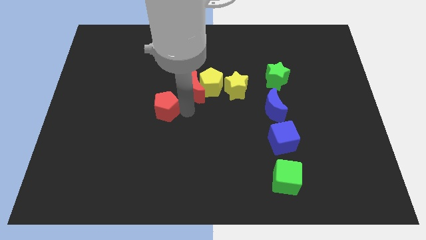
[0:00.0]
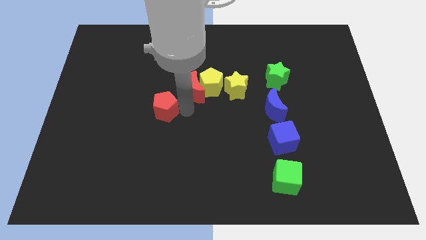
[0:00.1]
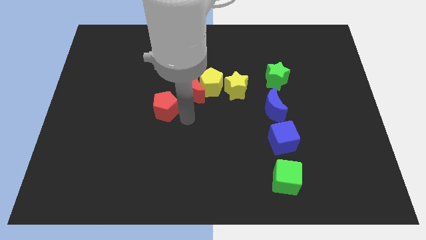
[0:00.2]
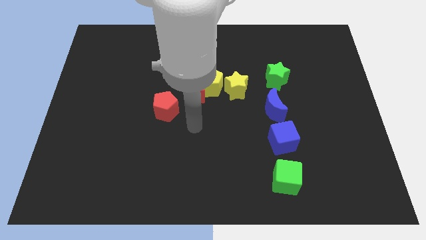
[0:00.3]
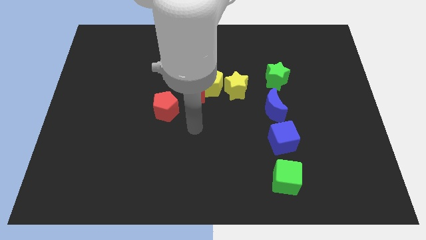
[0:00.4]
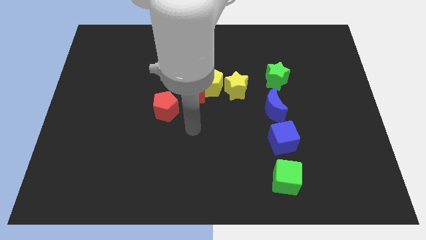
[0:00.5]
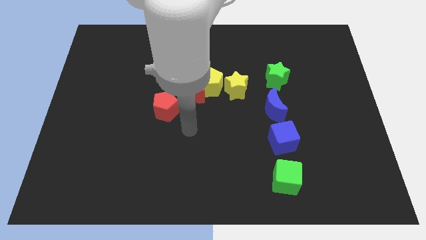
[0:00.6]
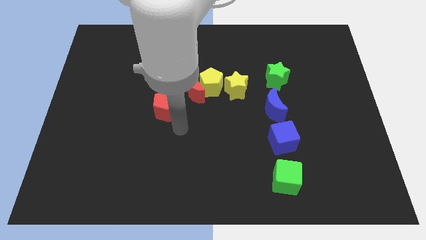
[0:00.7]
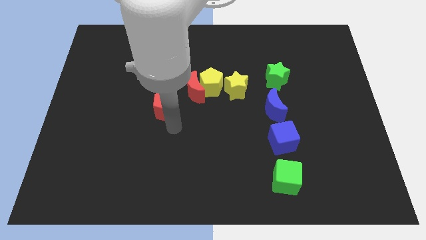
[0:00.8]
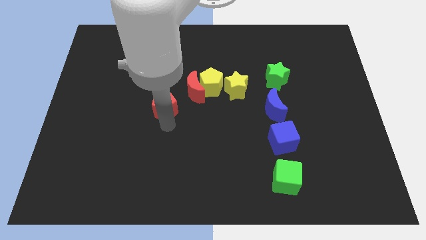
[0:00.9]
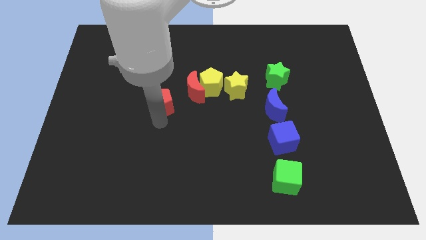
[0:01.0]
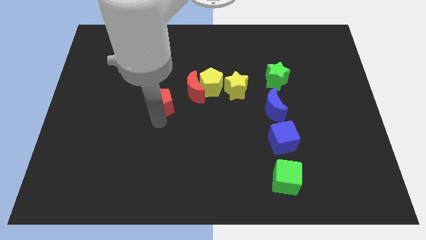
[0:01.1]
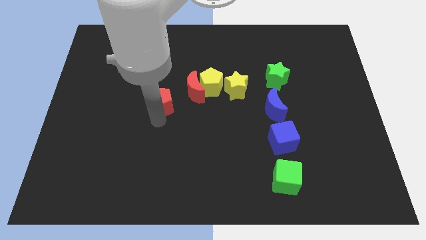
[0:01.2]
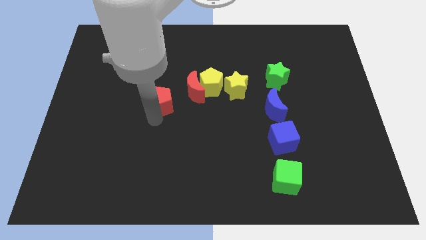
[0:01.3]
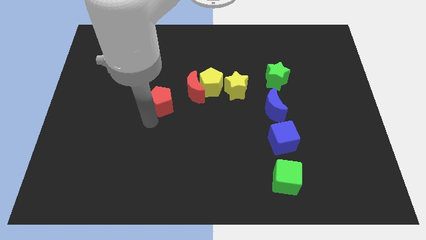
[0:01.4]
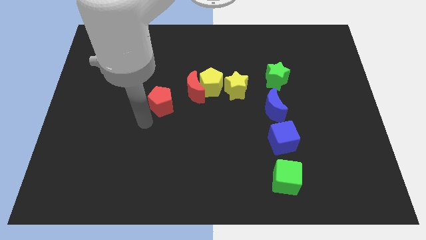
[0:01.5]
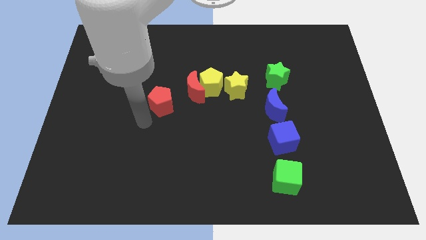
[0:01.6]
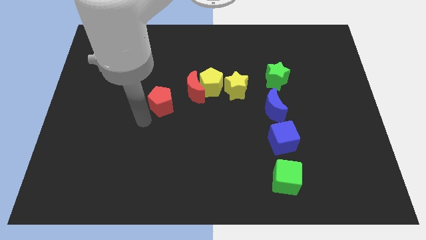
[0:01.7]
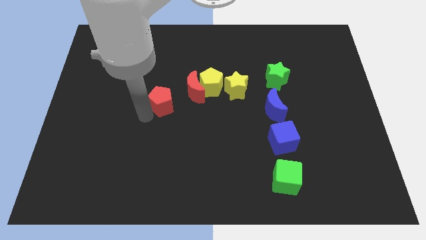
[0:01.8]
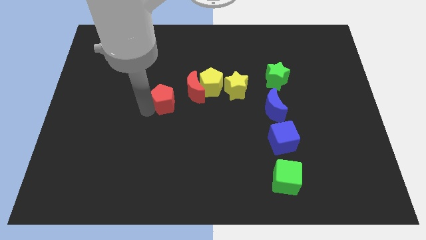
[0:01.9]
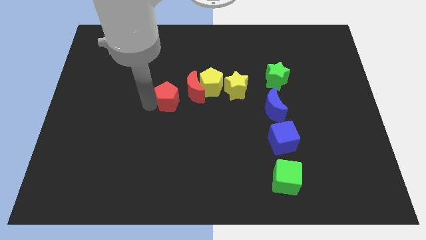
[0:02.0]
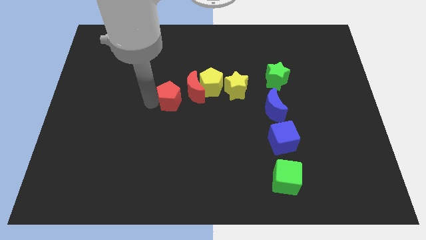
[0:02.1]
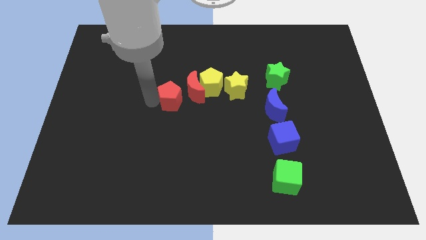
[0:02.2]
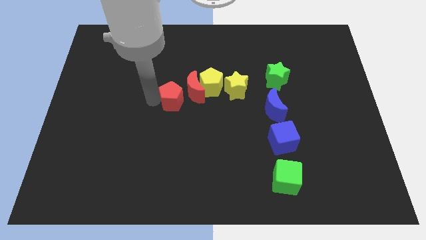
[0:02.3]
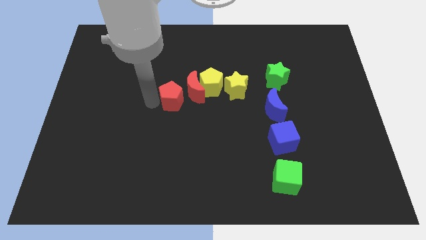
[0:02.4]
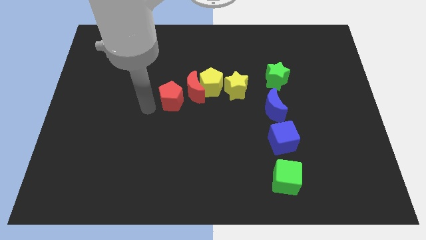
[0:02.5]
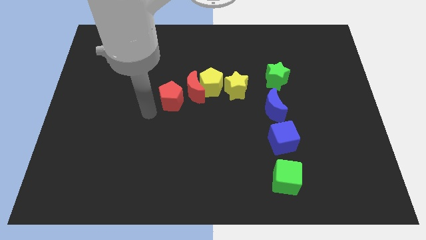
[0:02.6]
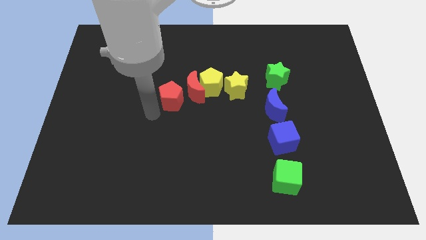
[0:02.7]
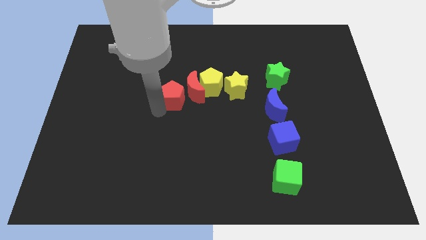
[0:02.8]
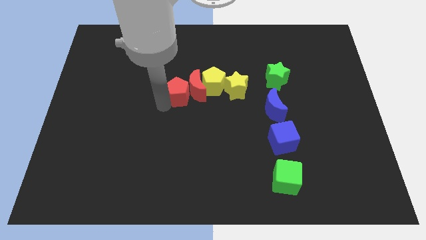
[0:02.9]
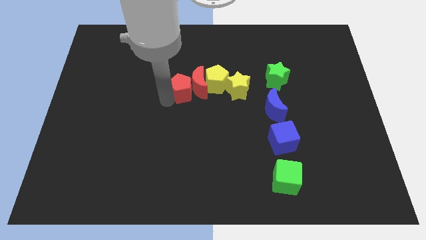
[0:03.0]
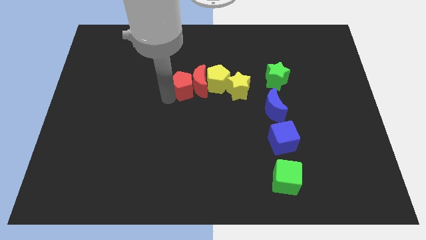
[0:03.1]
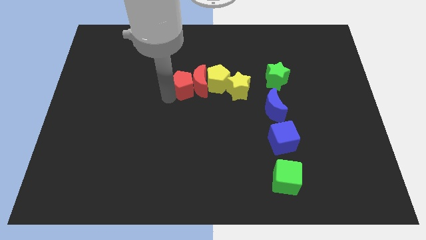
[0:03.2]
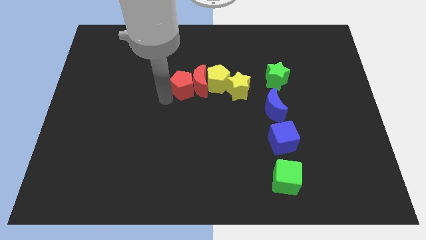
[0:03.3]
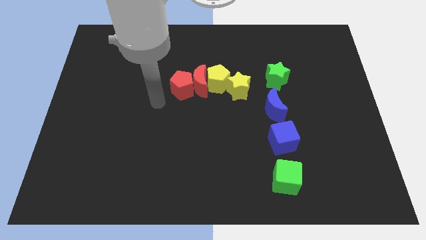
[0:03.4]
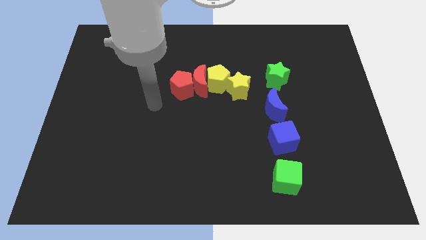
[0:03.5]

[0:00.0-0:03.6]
slide the red pentagon into the red moon

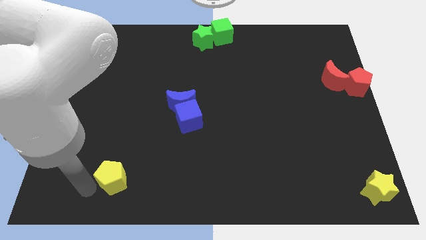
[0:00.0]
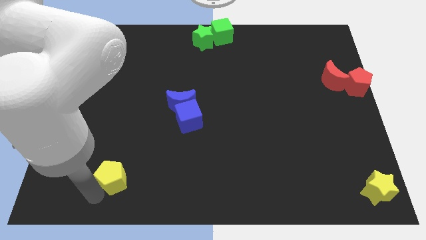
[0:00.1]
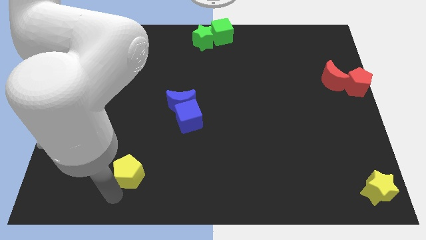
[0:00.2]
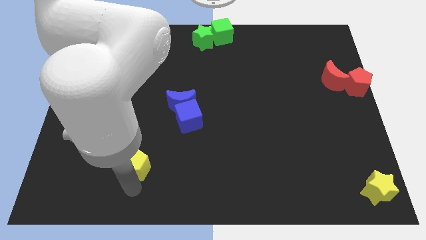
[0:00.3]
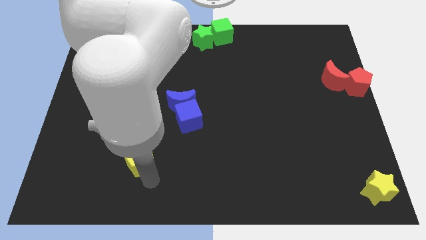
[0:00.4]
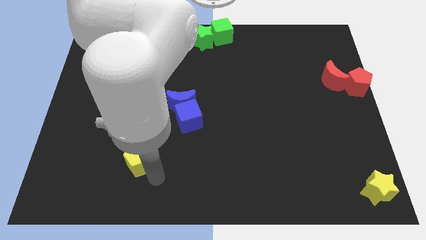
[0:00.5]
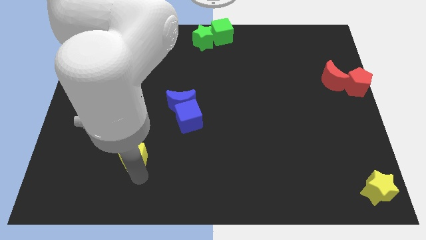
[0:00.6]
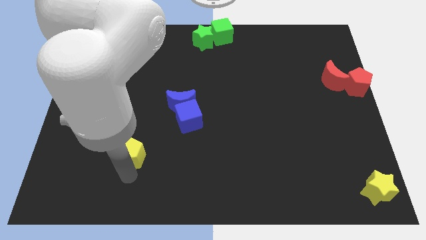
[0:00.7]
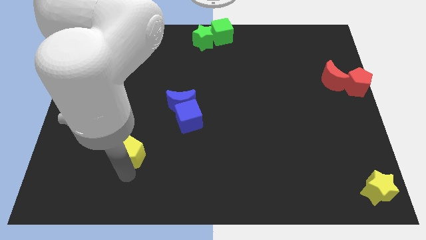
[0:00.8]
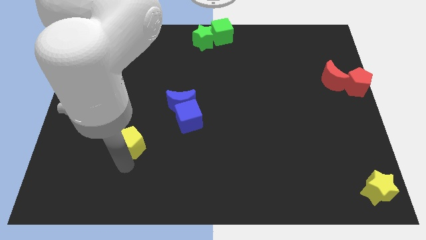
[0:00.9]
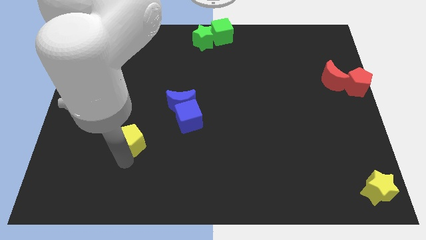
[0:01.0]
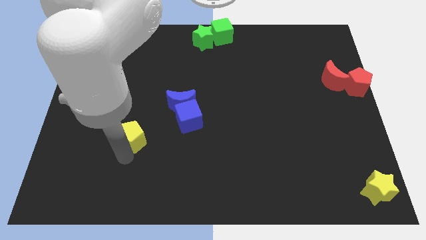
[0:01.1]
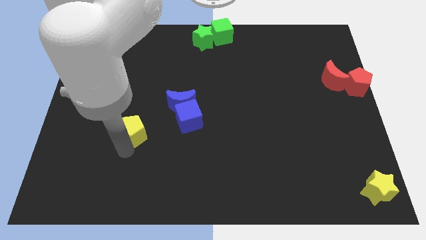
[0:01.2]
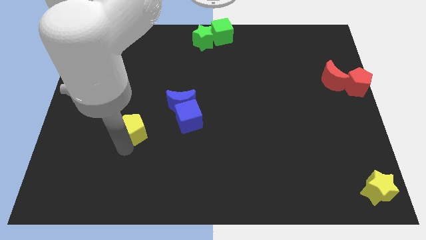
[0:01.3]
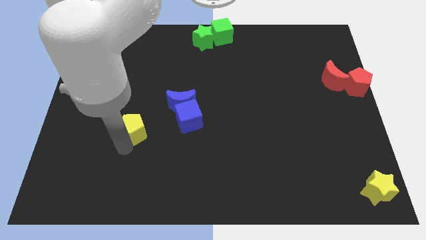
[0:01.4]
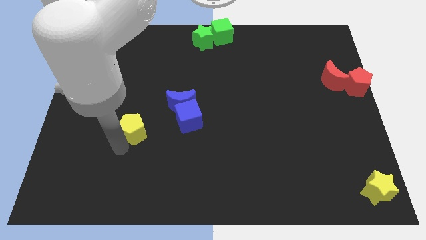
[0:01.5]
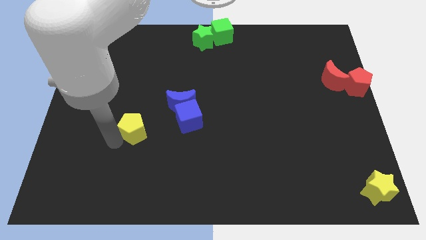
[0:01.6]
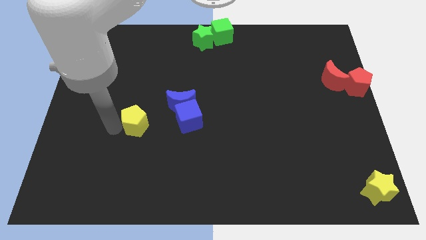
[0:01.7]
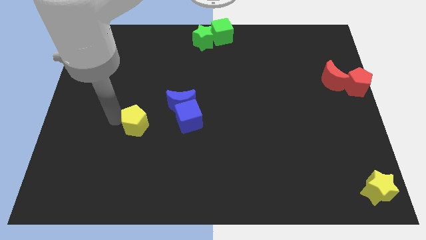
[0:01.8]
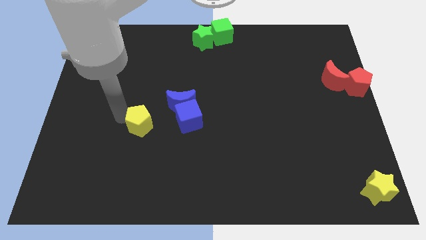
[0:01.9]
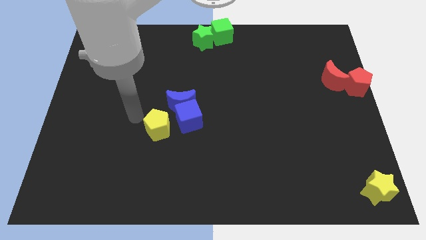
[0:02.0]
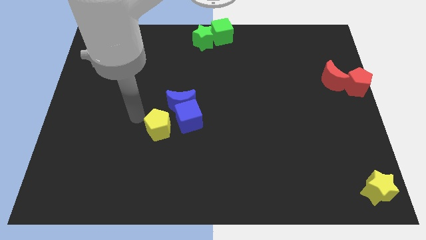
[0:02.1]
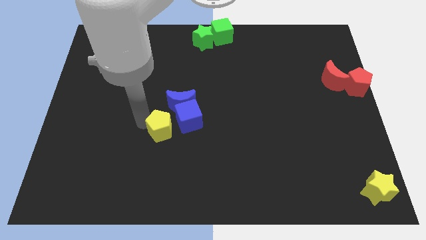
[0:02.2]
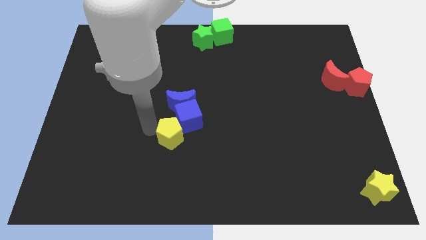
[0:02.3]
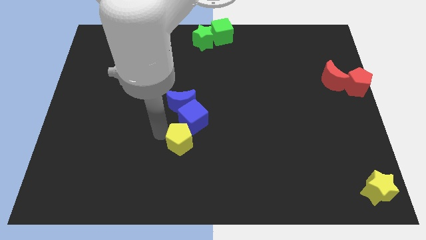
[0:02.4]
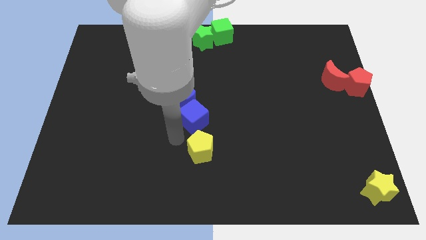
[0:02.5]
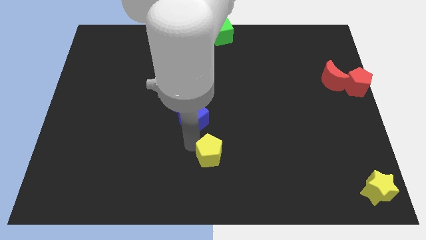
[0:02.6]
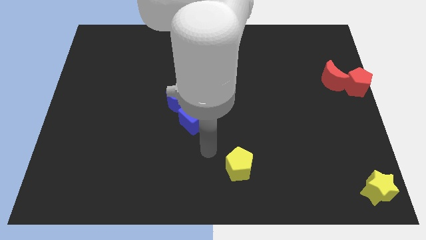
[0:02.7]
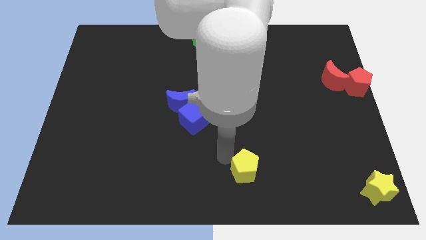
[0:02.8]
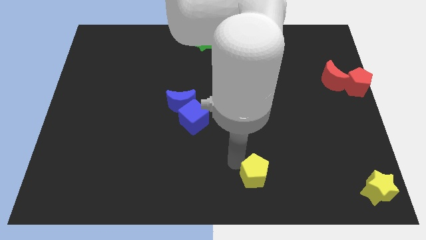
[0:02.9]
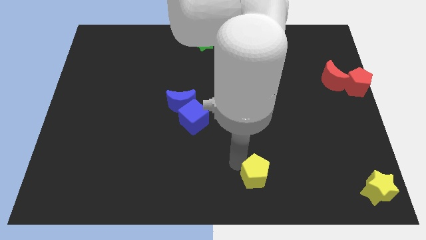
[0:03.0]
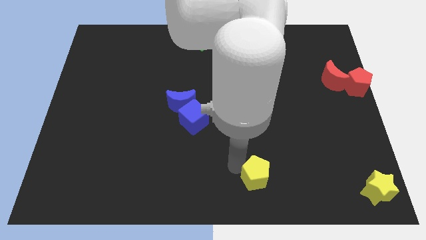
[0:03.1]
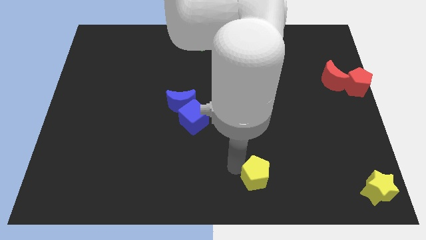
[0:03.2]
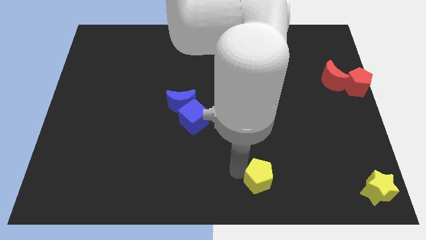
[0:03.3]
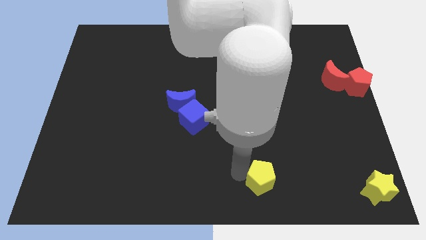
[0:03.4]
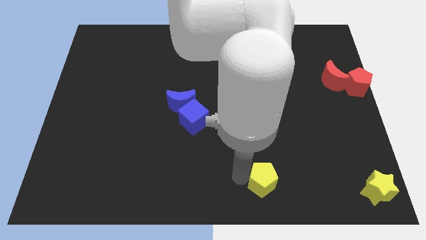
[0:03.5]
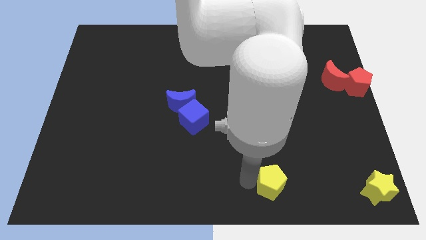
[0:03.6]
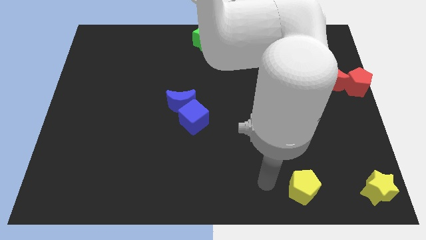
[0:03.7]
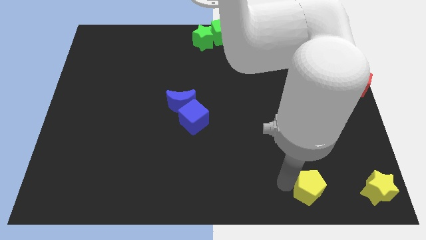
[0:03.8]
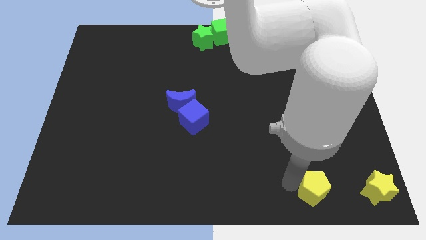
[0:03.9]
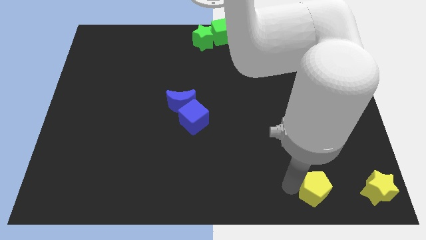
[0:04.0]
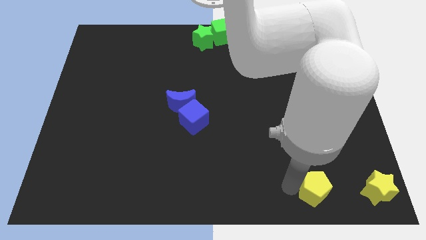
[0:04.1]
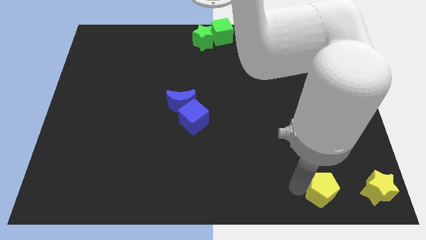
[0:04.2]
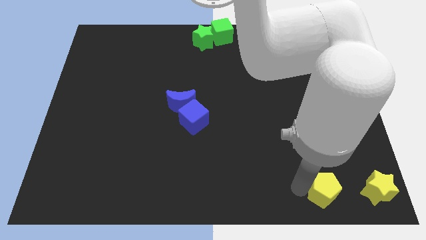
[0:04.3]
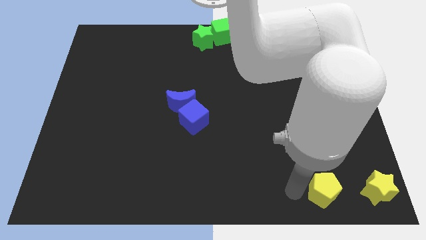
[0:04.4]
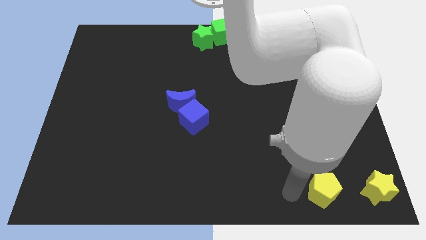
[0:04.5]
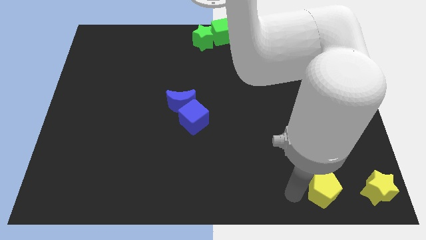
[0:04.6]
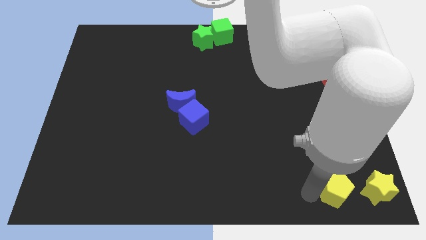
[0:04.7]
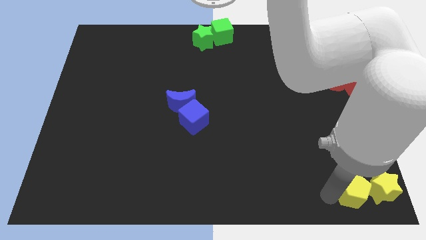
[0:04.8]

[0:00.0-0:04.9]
push the yellow pentagon left to the yellow star

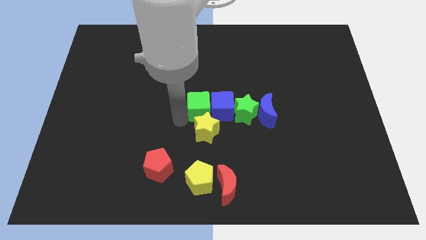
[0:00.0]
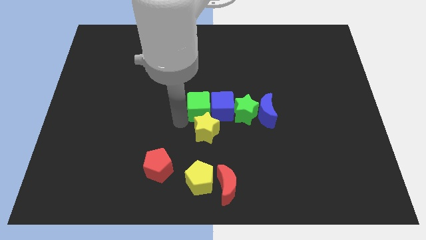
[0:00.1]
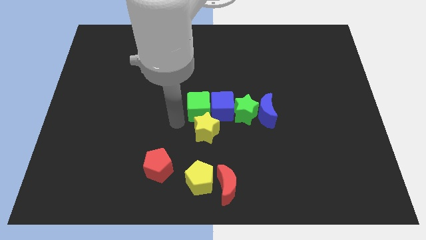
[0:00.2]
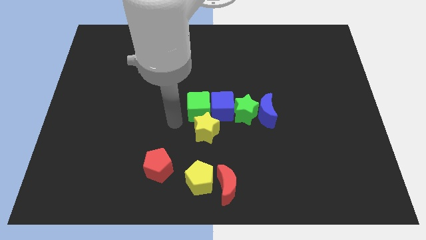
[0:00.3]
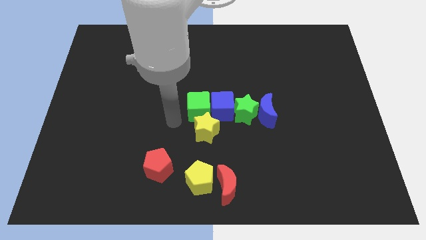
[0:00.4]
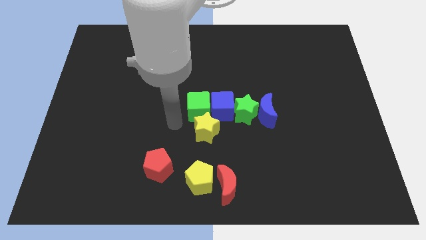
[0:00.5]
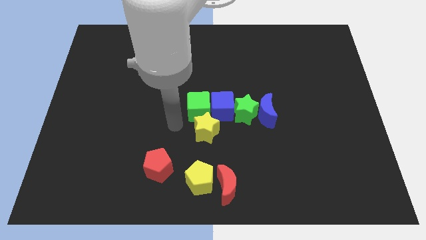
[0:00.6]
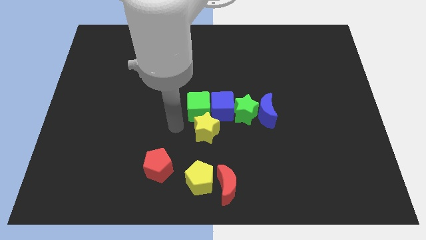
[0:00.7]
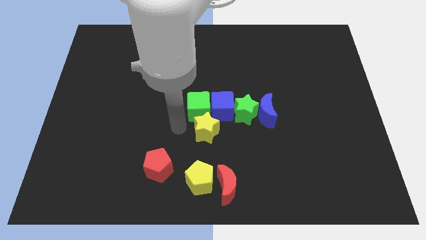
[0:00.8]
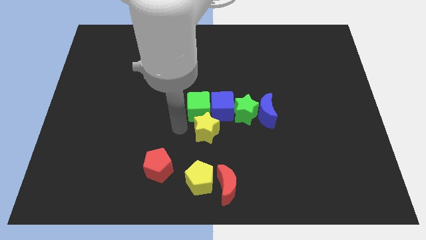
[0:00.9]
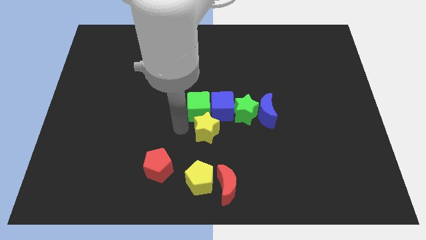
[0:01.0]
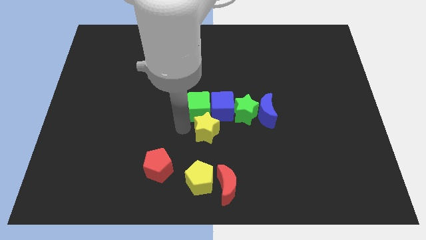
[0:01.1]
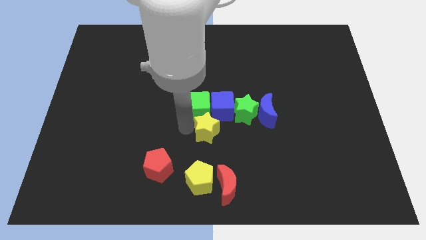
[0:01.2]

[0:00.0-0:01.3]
move your arm close to the yellow star
